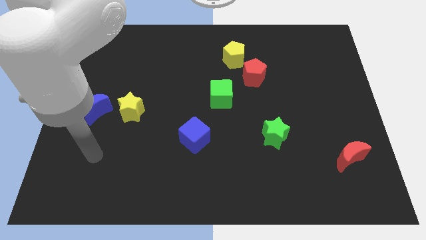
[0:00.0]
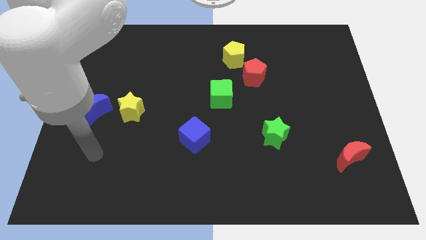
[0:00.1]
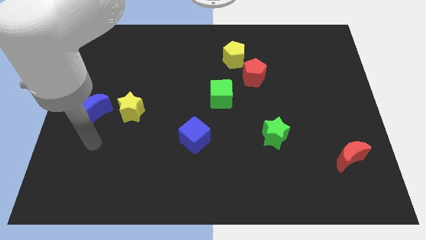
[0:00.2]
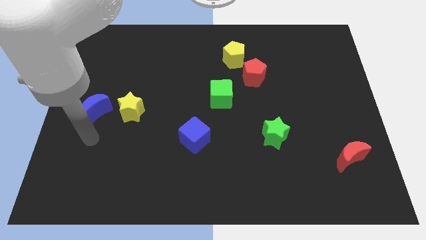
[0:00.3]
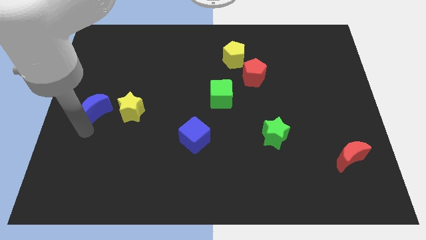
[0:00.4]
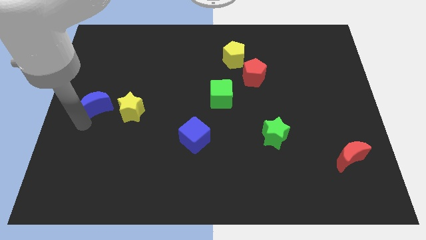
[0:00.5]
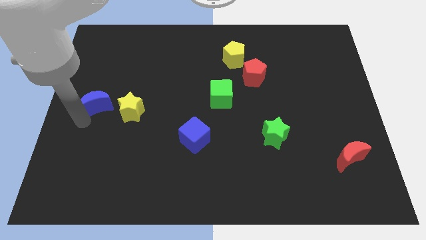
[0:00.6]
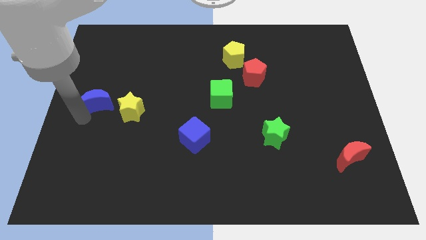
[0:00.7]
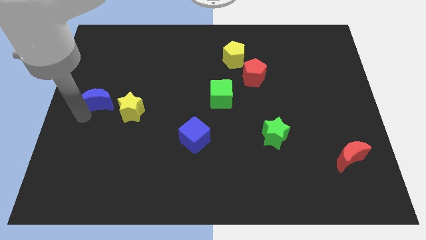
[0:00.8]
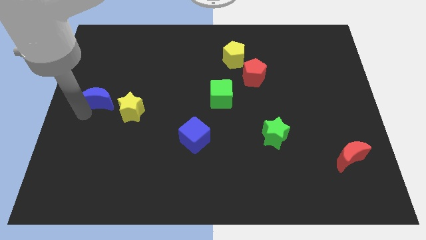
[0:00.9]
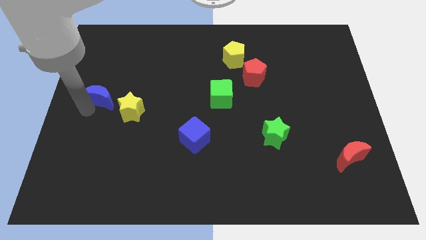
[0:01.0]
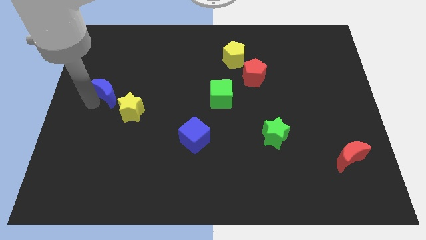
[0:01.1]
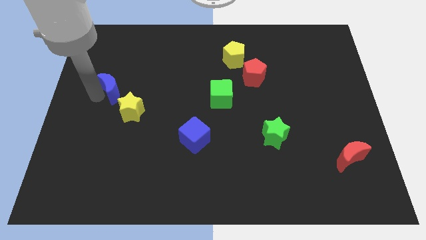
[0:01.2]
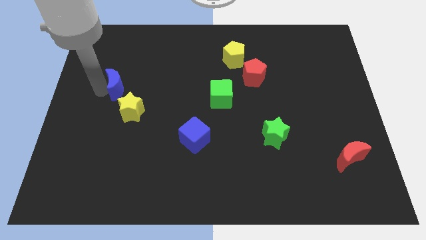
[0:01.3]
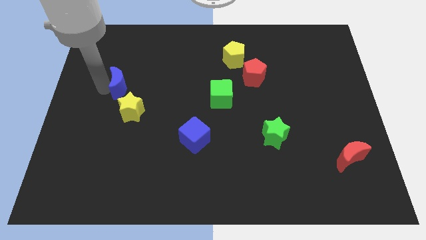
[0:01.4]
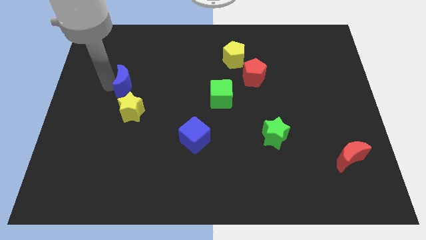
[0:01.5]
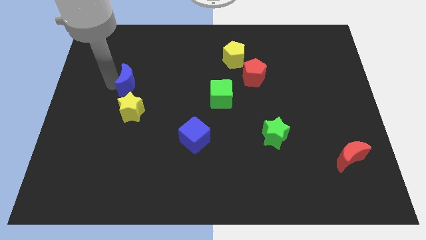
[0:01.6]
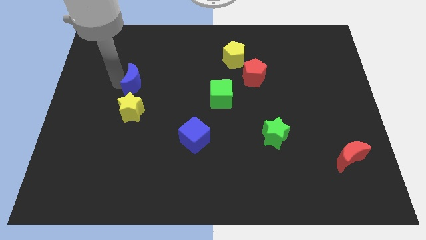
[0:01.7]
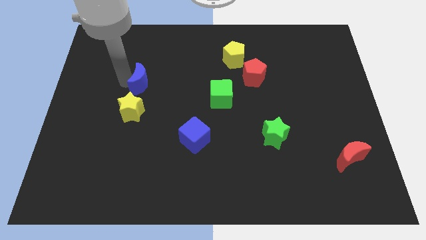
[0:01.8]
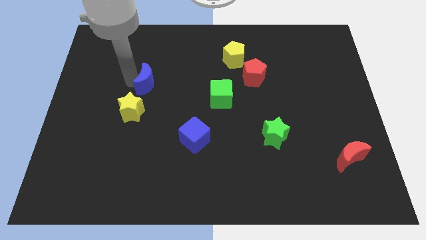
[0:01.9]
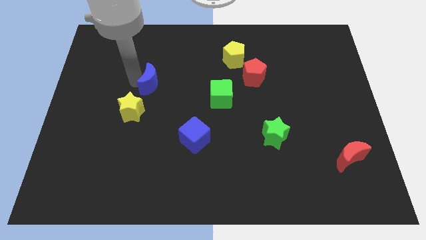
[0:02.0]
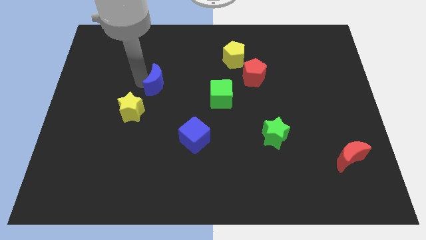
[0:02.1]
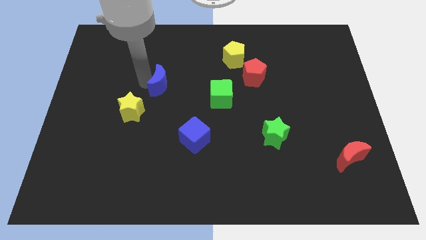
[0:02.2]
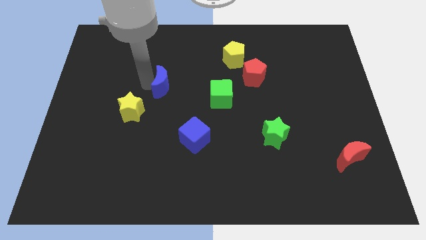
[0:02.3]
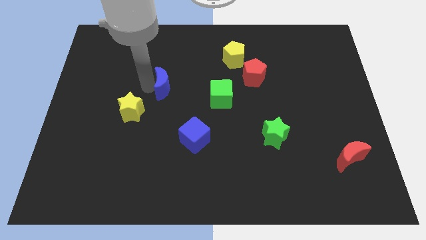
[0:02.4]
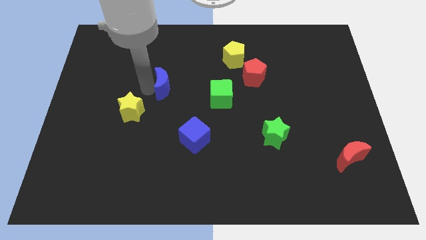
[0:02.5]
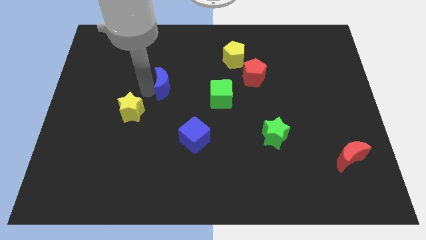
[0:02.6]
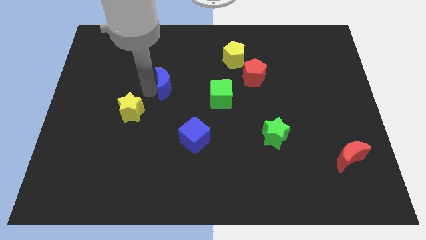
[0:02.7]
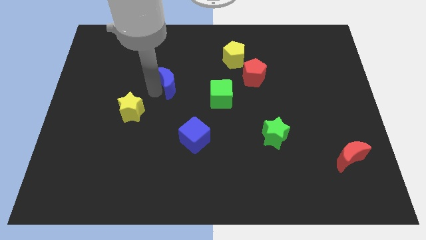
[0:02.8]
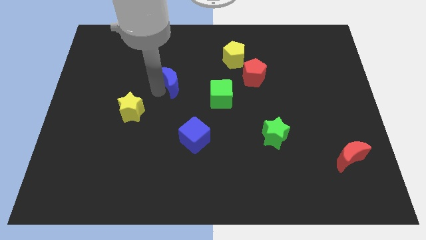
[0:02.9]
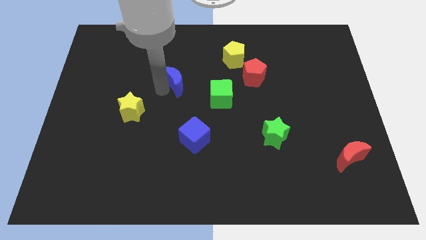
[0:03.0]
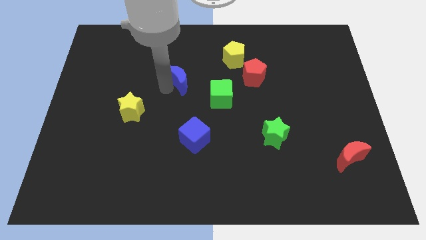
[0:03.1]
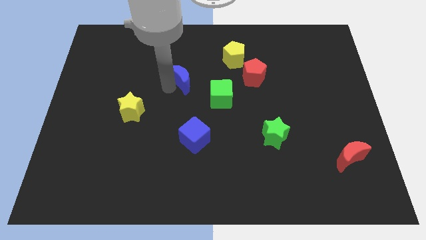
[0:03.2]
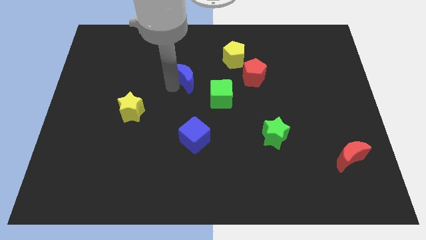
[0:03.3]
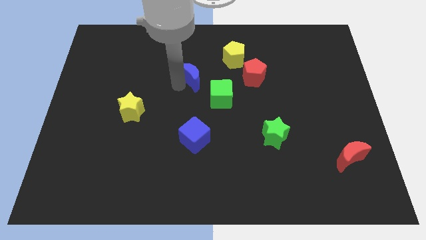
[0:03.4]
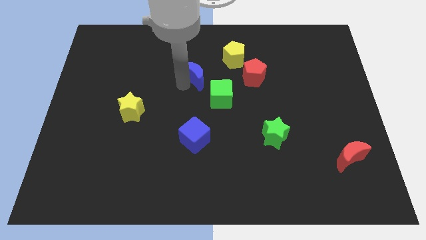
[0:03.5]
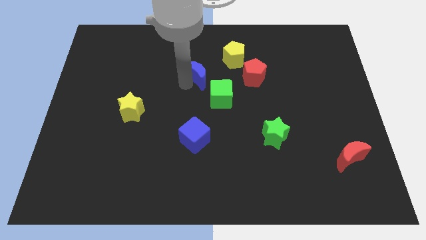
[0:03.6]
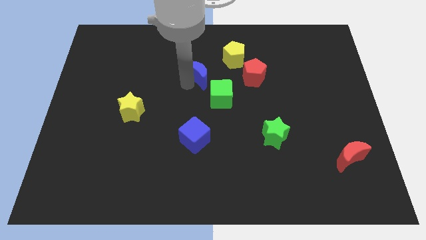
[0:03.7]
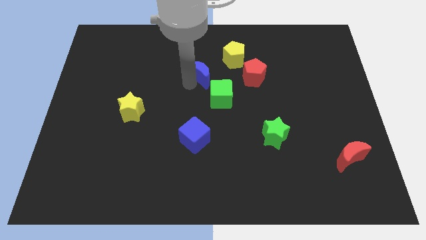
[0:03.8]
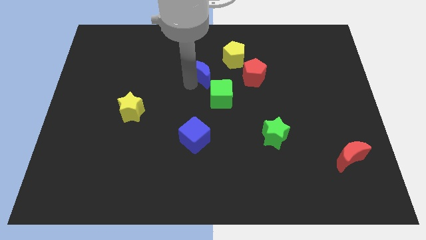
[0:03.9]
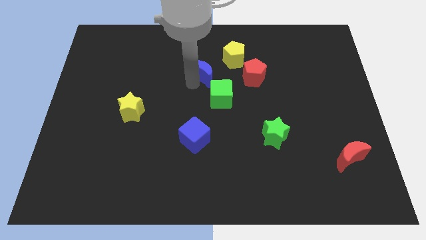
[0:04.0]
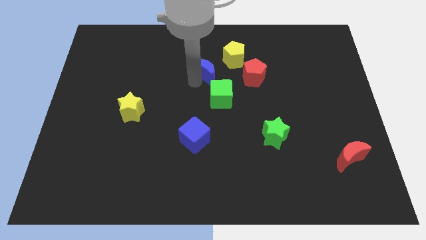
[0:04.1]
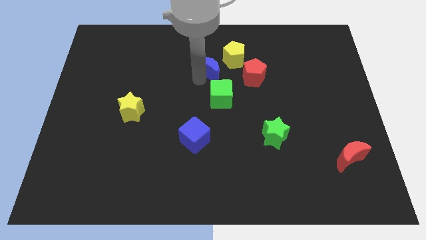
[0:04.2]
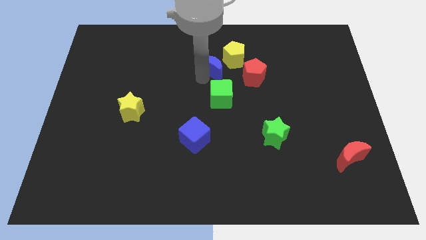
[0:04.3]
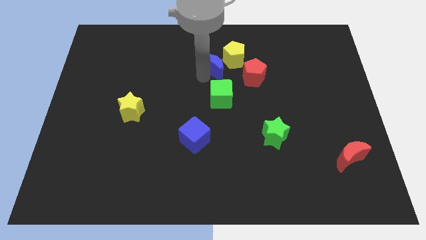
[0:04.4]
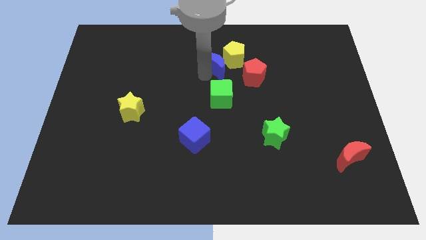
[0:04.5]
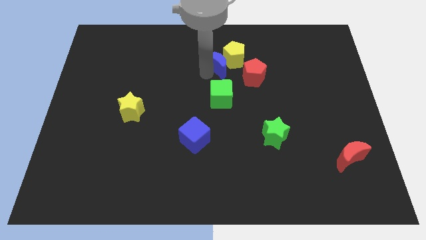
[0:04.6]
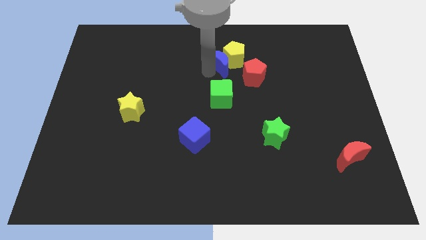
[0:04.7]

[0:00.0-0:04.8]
slide the blue moon next to the yellow pentagon

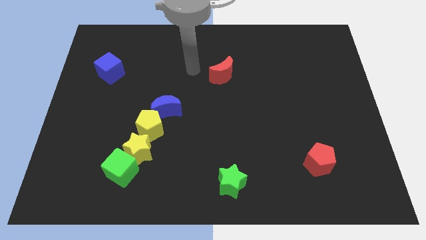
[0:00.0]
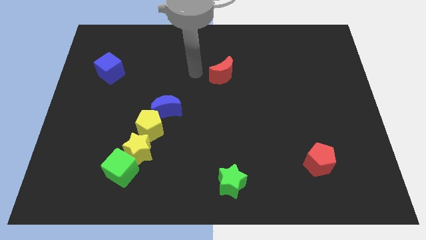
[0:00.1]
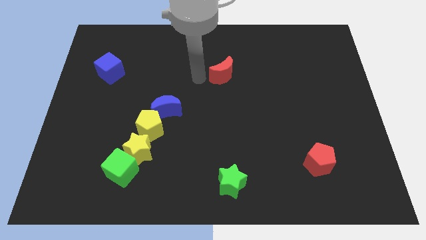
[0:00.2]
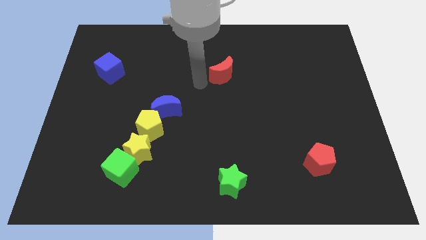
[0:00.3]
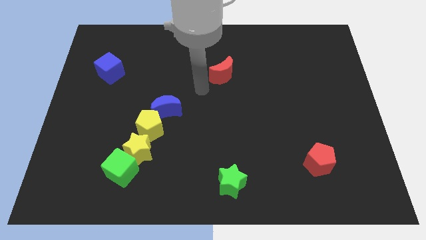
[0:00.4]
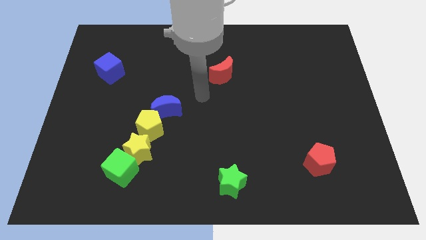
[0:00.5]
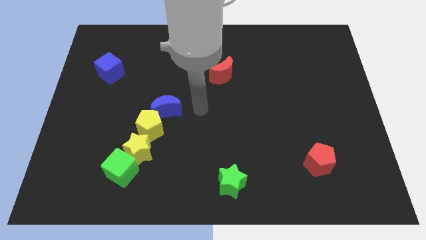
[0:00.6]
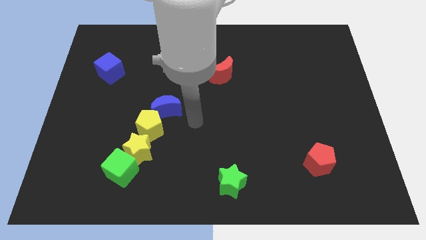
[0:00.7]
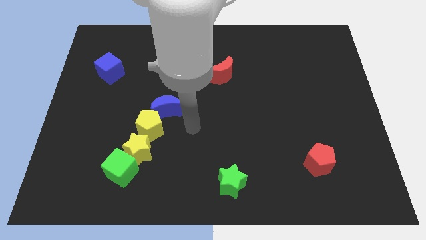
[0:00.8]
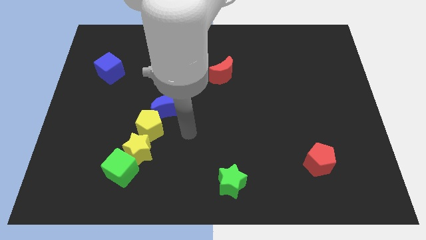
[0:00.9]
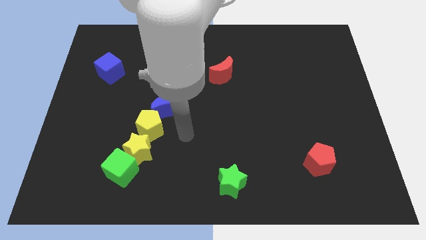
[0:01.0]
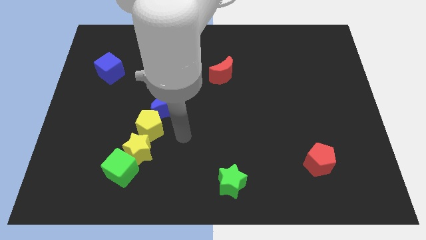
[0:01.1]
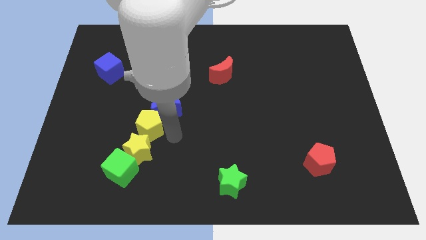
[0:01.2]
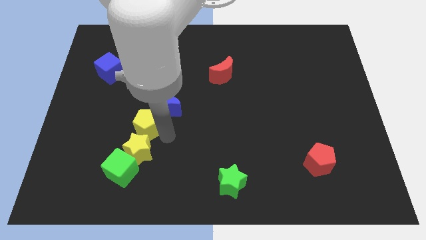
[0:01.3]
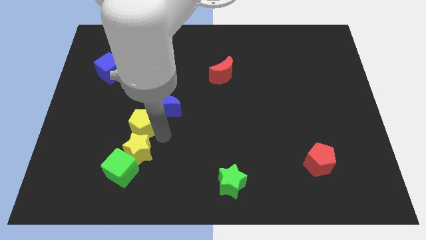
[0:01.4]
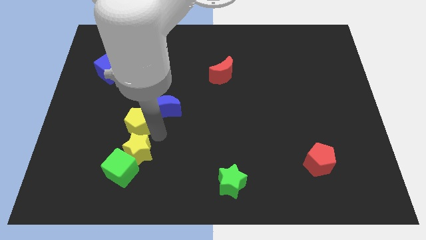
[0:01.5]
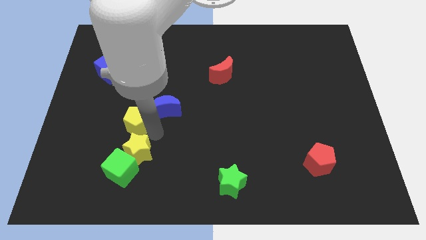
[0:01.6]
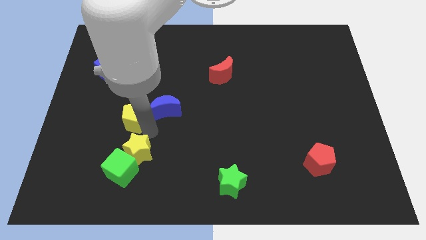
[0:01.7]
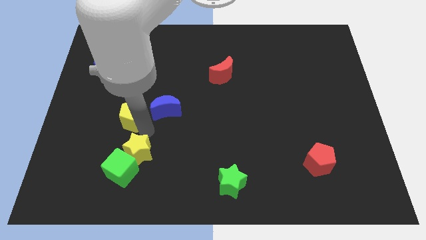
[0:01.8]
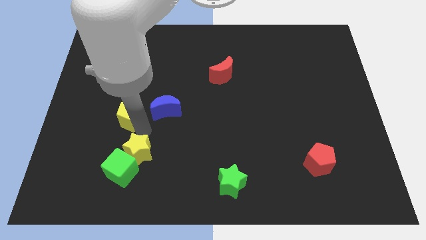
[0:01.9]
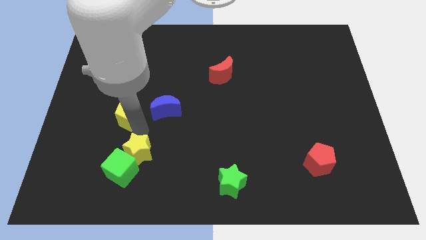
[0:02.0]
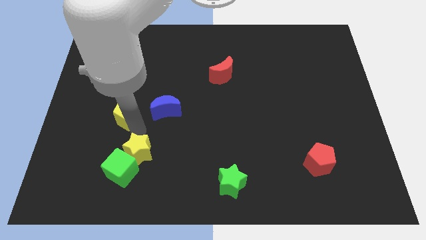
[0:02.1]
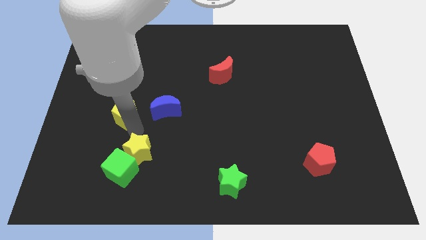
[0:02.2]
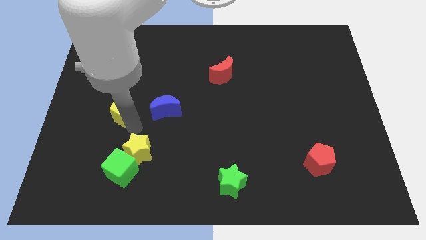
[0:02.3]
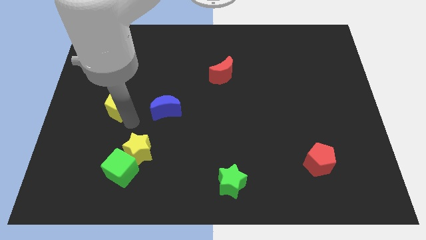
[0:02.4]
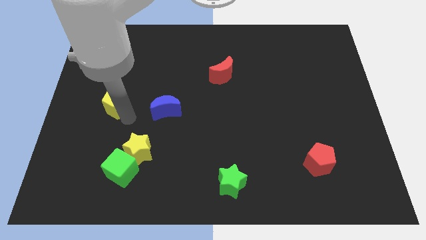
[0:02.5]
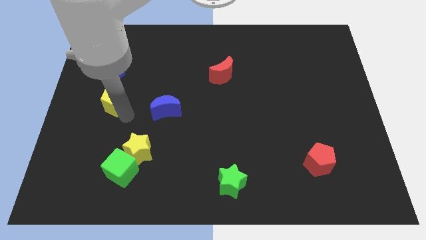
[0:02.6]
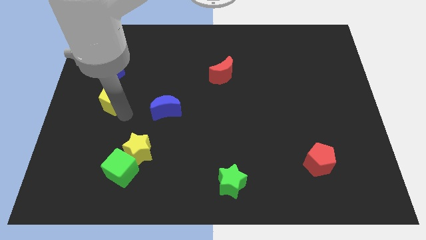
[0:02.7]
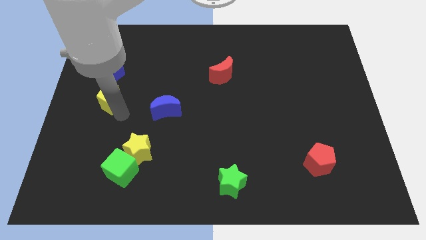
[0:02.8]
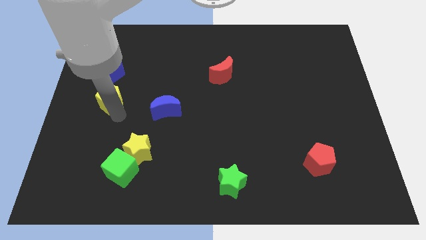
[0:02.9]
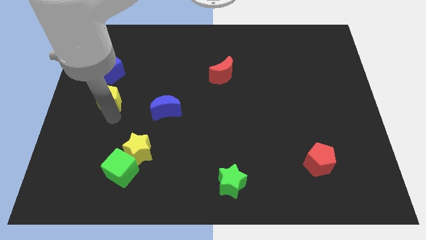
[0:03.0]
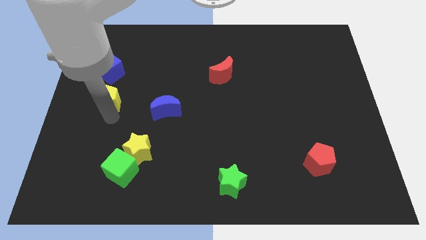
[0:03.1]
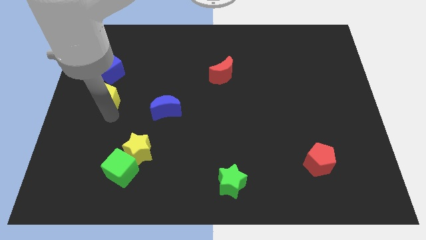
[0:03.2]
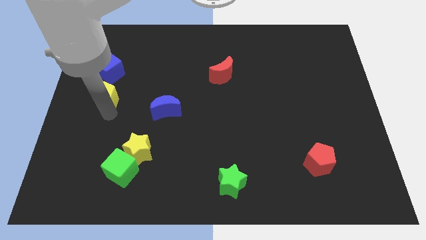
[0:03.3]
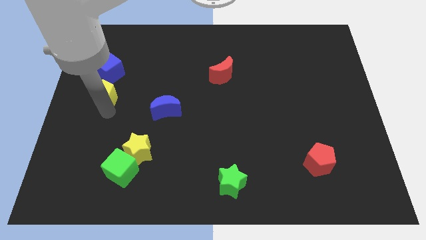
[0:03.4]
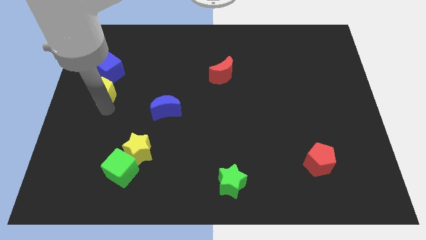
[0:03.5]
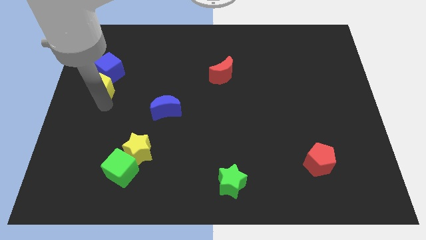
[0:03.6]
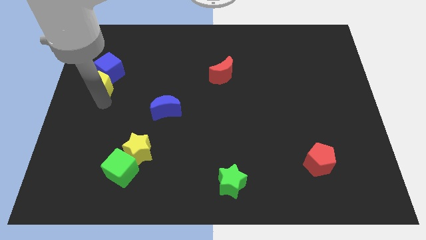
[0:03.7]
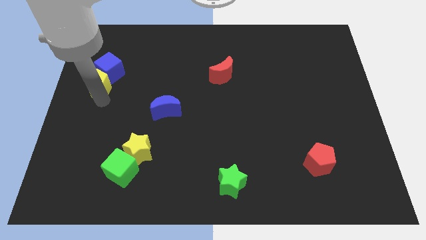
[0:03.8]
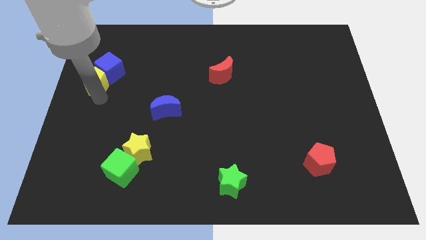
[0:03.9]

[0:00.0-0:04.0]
push the yellow pentagon towards the blue cube
